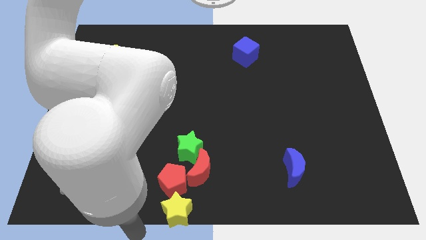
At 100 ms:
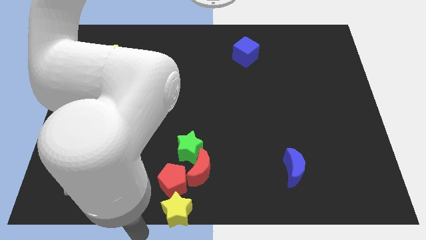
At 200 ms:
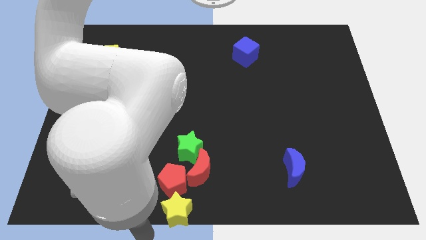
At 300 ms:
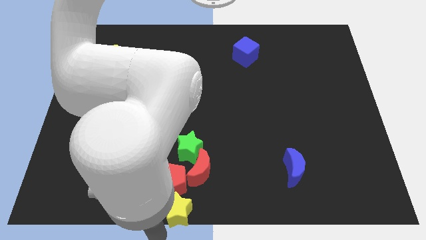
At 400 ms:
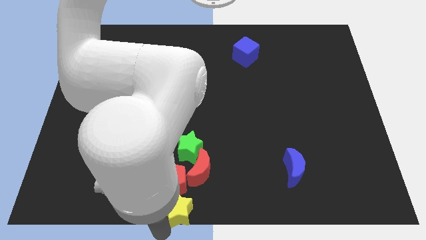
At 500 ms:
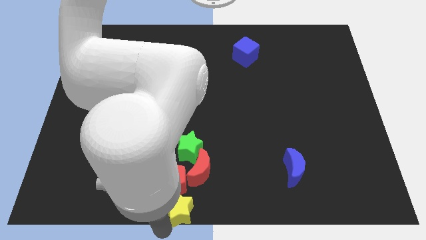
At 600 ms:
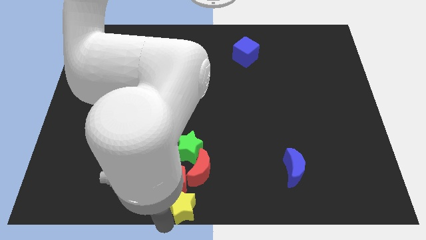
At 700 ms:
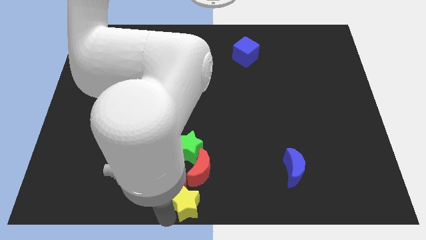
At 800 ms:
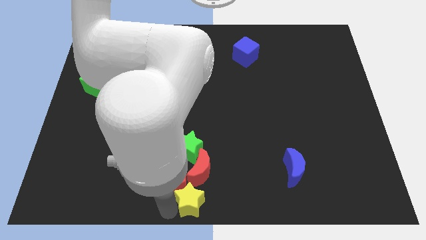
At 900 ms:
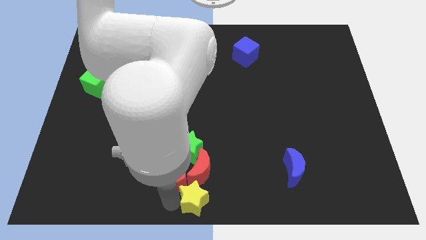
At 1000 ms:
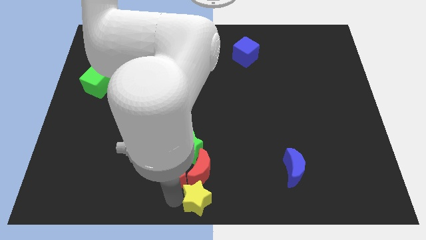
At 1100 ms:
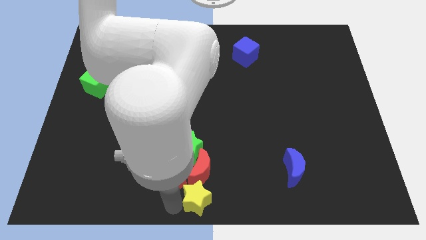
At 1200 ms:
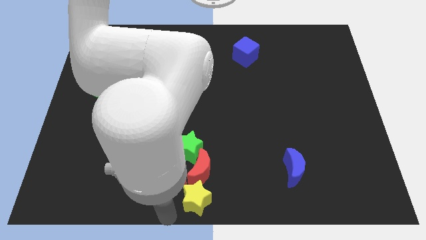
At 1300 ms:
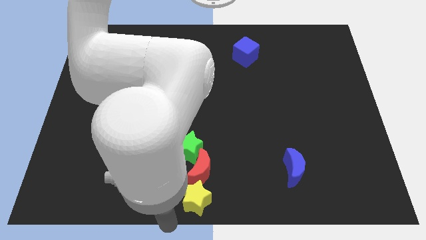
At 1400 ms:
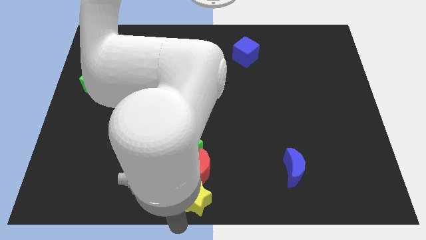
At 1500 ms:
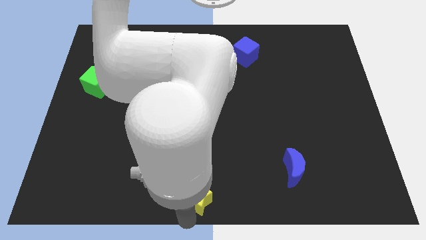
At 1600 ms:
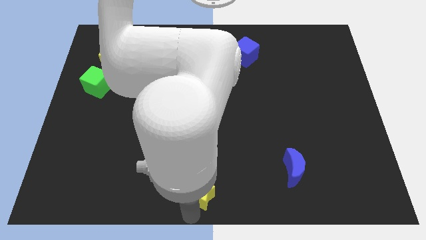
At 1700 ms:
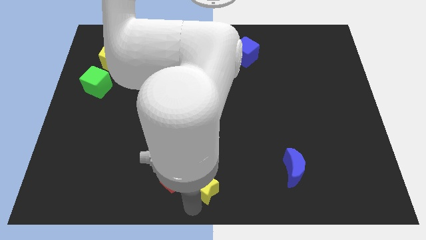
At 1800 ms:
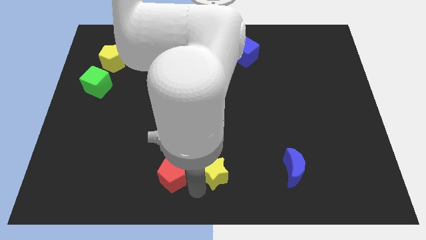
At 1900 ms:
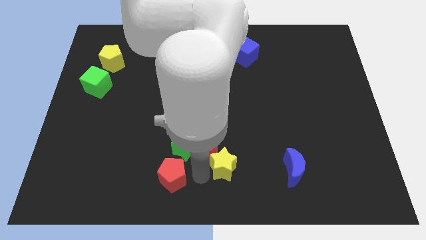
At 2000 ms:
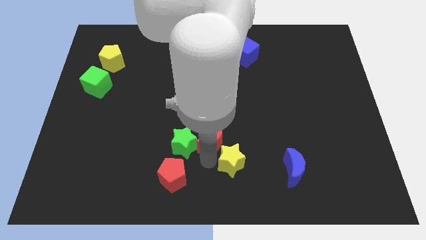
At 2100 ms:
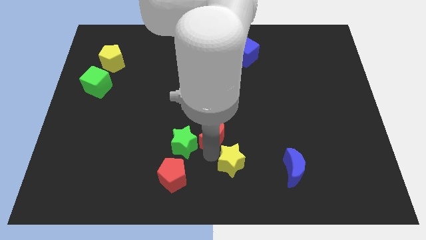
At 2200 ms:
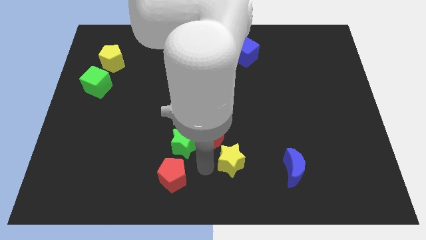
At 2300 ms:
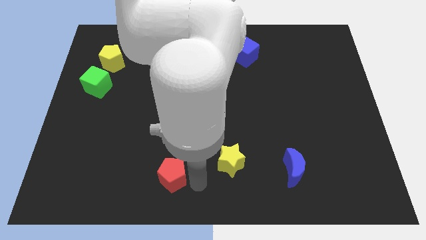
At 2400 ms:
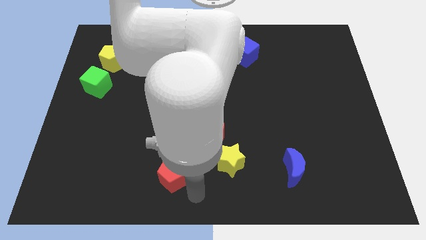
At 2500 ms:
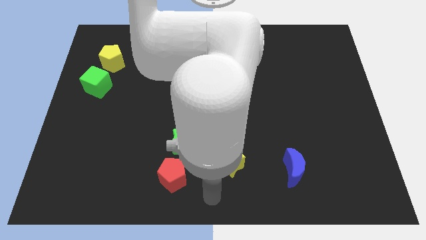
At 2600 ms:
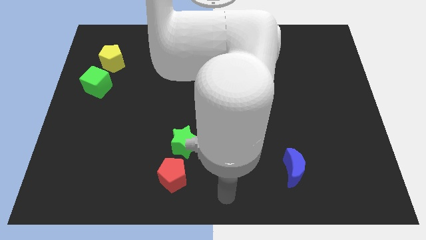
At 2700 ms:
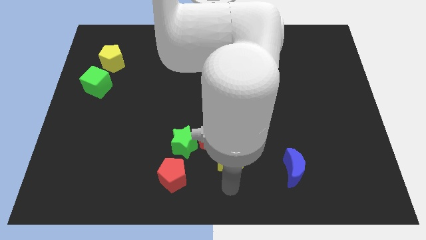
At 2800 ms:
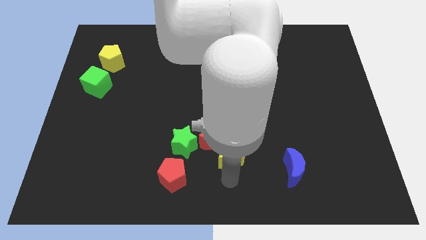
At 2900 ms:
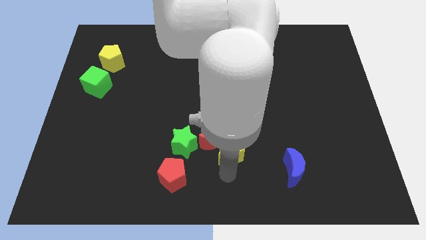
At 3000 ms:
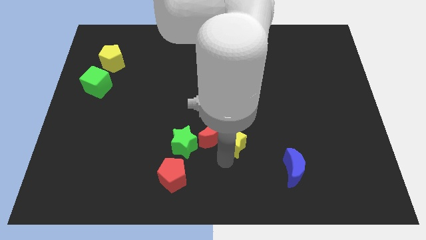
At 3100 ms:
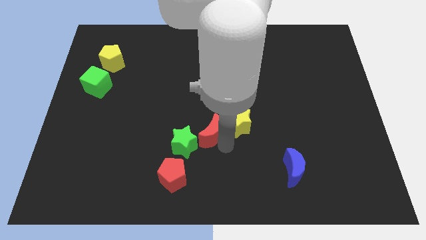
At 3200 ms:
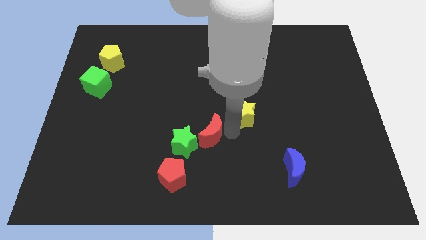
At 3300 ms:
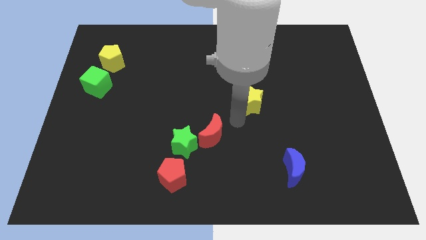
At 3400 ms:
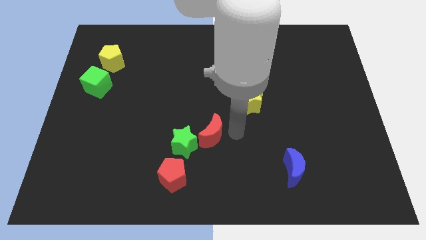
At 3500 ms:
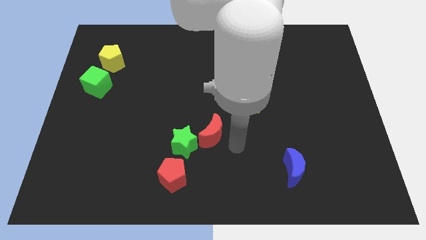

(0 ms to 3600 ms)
drag yellow star towards middle of the board

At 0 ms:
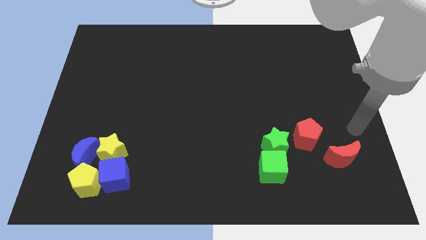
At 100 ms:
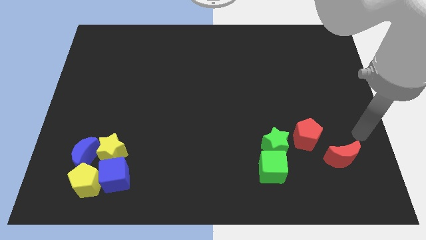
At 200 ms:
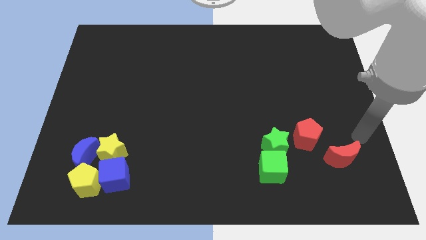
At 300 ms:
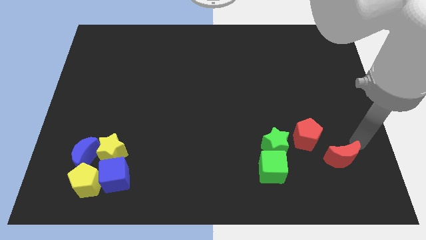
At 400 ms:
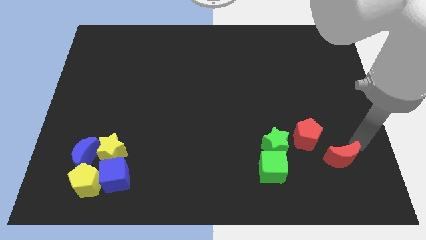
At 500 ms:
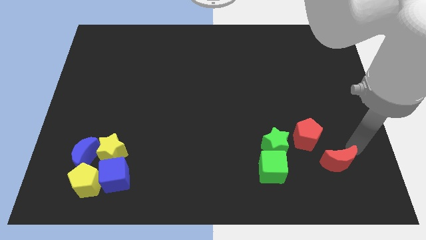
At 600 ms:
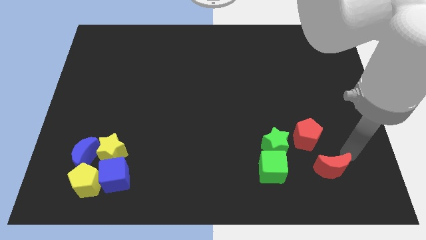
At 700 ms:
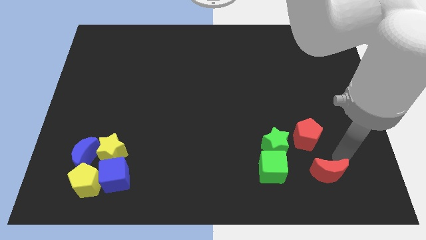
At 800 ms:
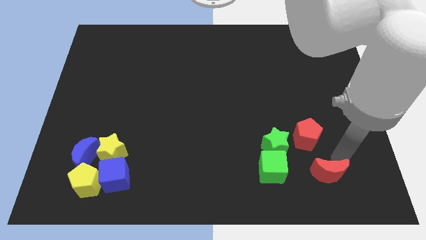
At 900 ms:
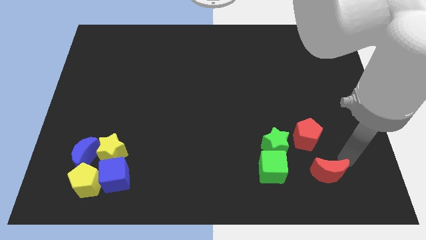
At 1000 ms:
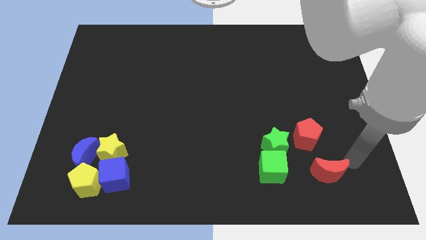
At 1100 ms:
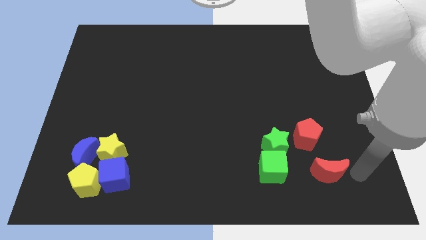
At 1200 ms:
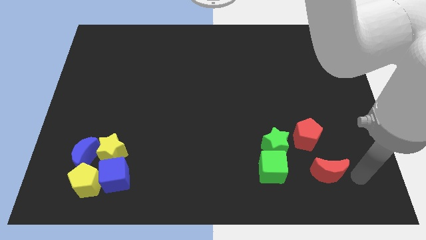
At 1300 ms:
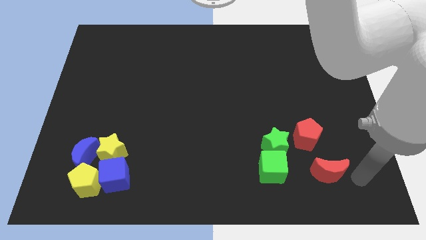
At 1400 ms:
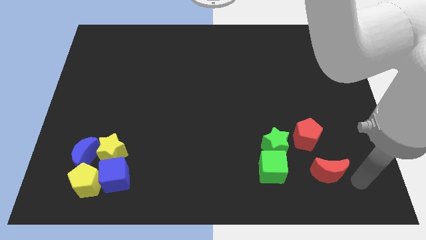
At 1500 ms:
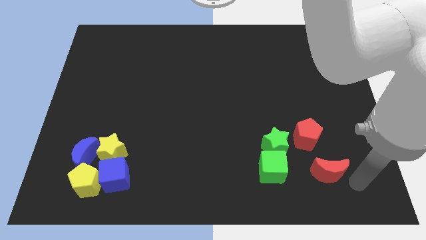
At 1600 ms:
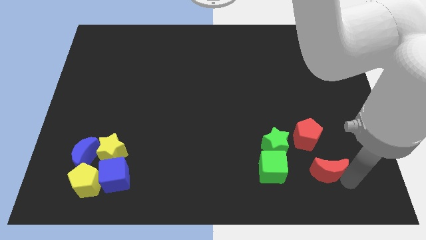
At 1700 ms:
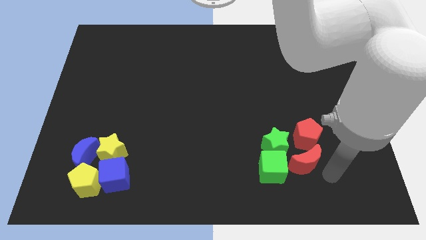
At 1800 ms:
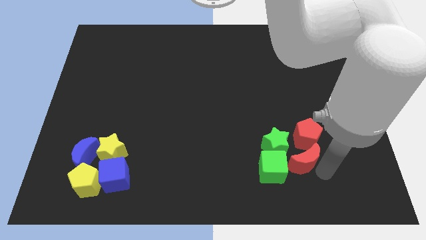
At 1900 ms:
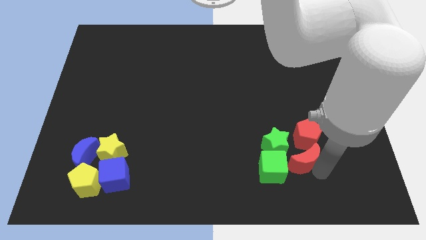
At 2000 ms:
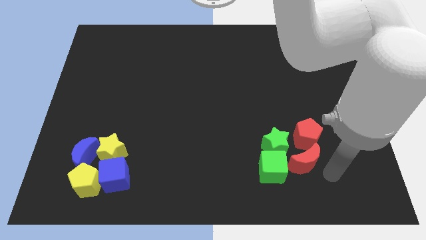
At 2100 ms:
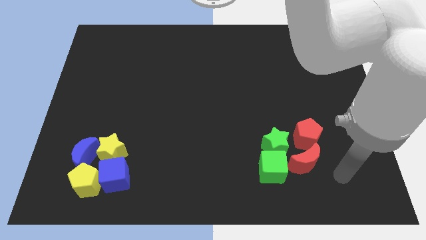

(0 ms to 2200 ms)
move red crescent into the group of blocks

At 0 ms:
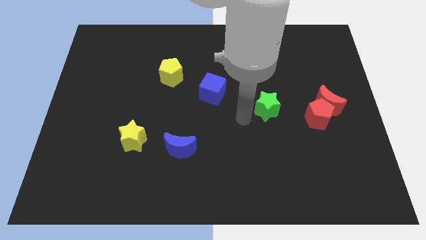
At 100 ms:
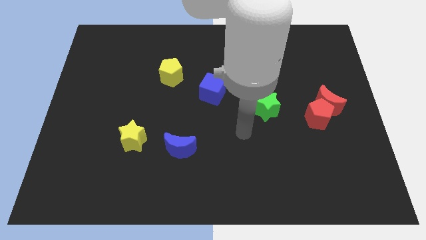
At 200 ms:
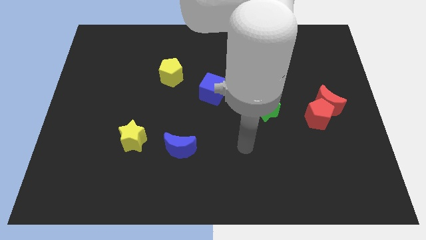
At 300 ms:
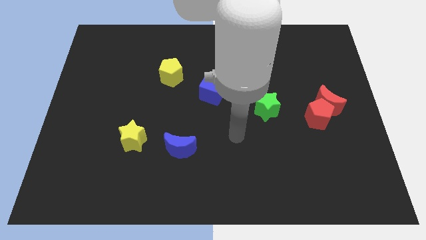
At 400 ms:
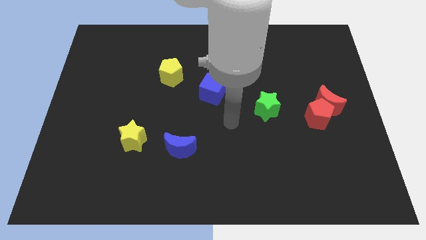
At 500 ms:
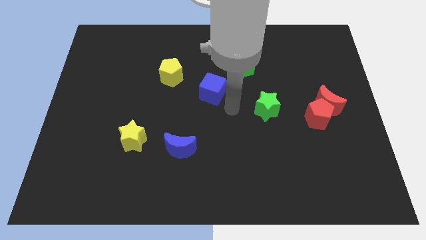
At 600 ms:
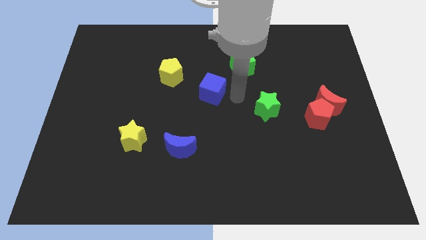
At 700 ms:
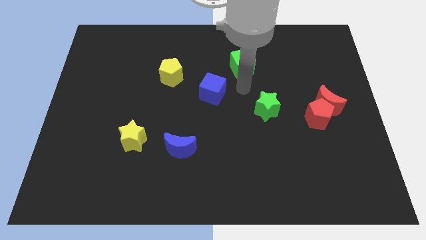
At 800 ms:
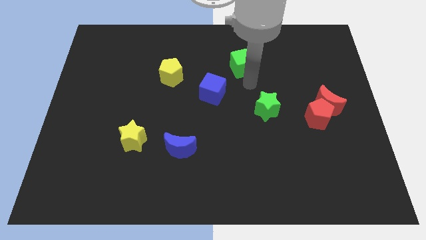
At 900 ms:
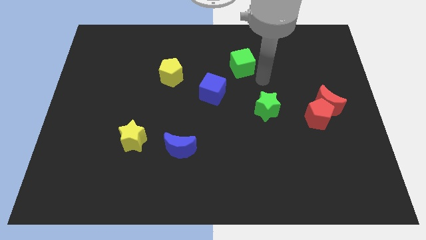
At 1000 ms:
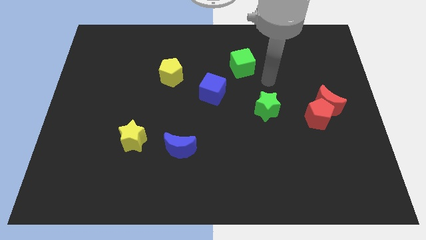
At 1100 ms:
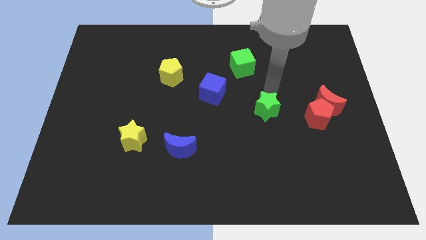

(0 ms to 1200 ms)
point your arm above green star

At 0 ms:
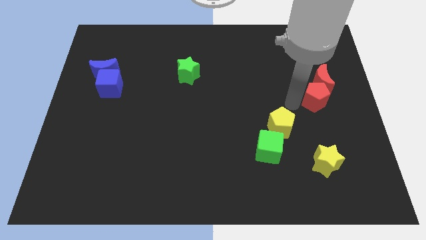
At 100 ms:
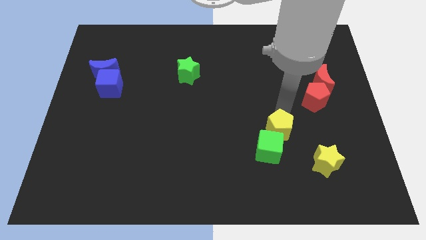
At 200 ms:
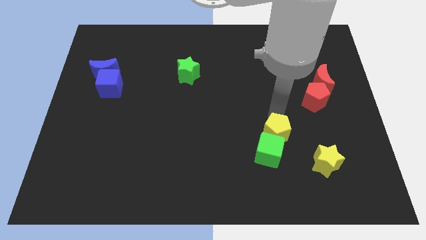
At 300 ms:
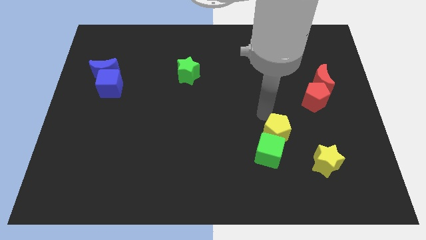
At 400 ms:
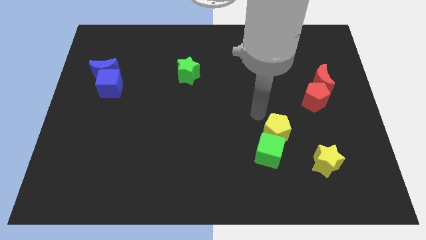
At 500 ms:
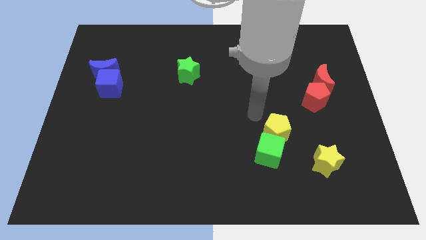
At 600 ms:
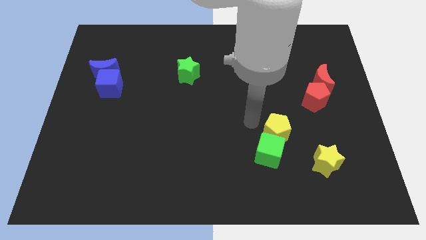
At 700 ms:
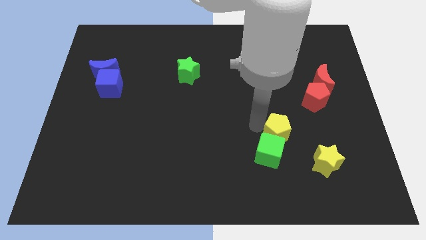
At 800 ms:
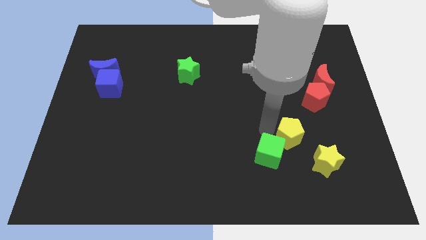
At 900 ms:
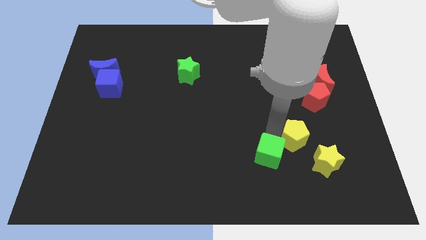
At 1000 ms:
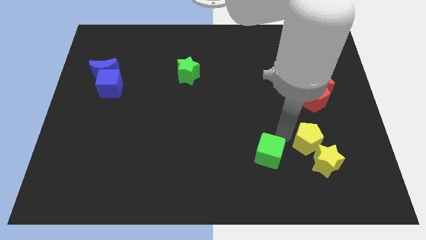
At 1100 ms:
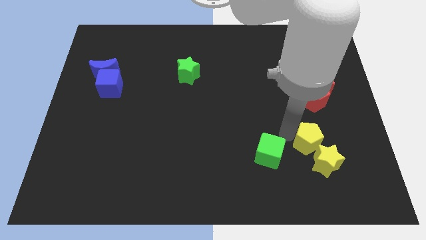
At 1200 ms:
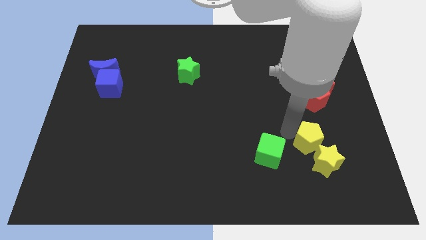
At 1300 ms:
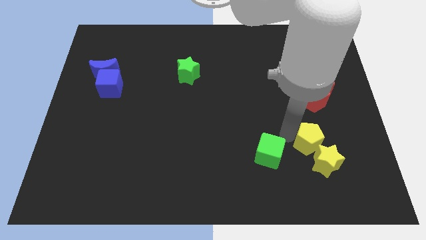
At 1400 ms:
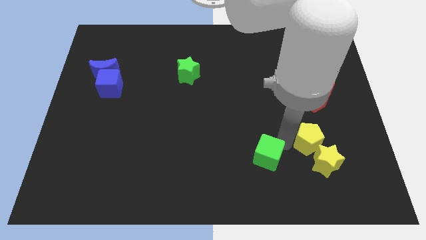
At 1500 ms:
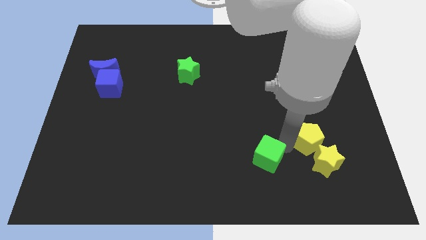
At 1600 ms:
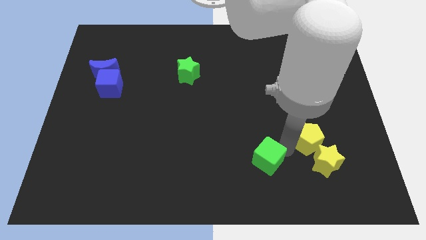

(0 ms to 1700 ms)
slide the yellow pentagon into the top left side of the yellow star

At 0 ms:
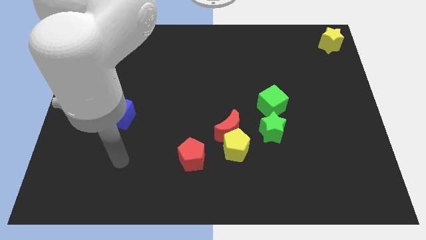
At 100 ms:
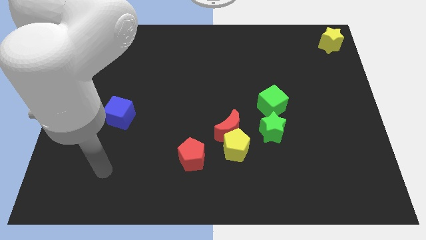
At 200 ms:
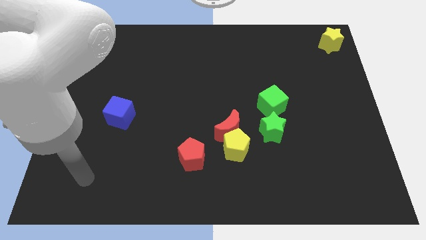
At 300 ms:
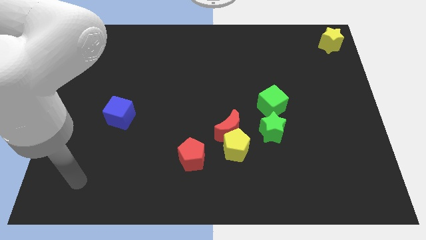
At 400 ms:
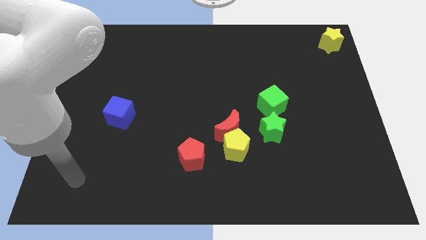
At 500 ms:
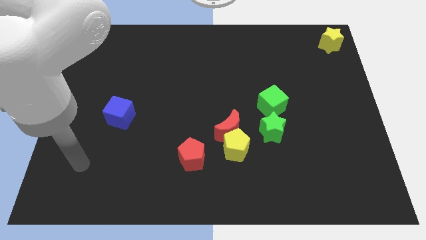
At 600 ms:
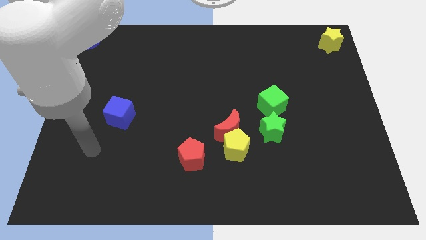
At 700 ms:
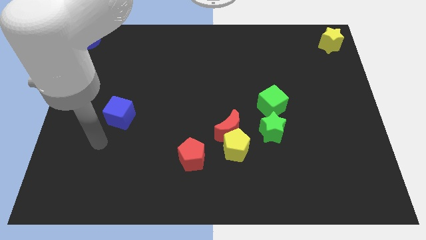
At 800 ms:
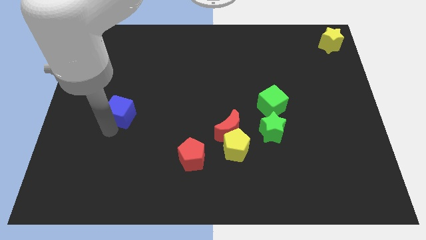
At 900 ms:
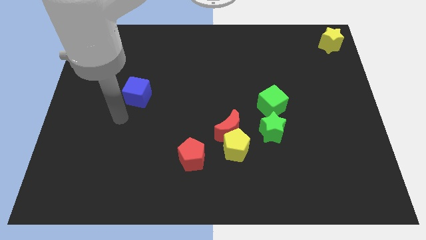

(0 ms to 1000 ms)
touch the bottom side of the blue cube
